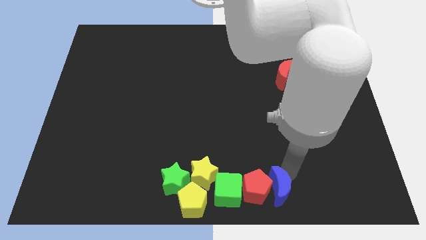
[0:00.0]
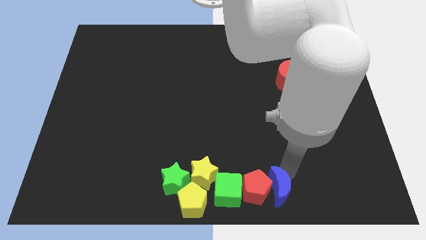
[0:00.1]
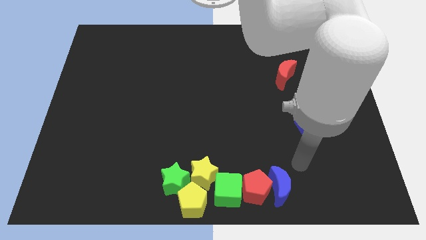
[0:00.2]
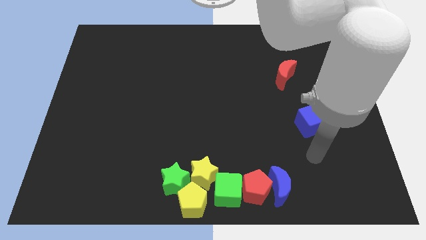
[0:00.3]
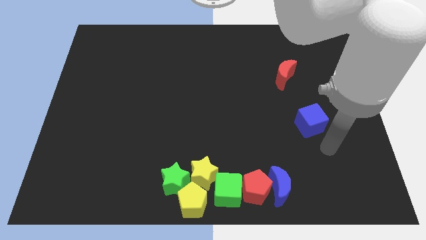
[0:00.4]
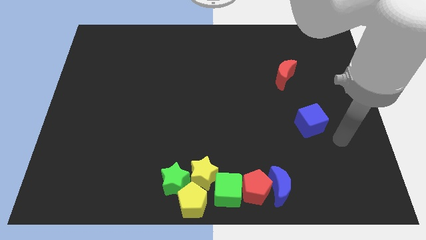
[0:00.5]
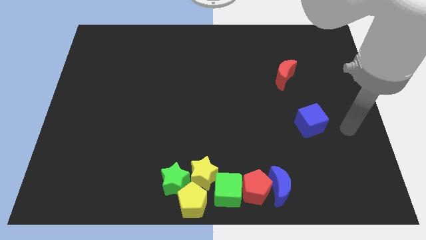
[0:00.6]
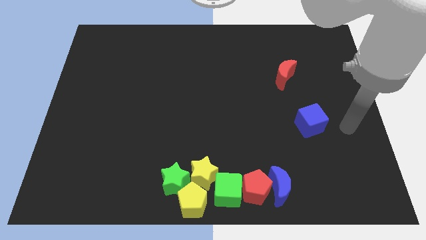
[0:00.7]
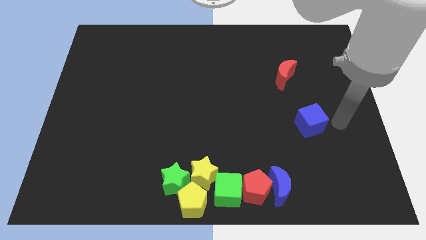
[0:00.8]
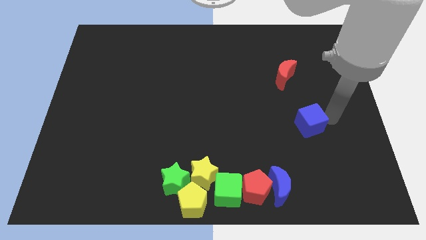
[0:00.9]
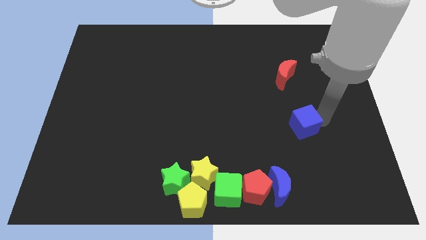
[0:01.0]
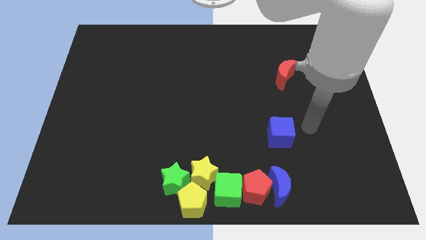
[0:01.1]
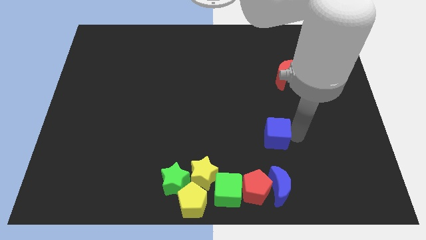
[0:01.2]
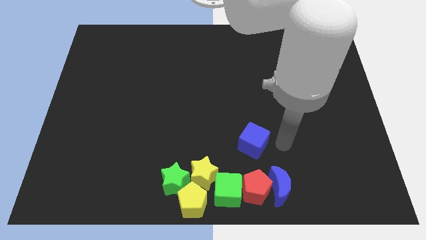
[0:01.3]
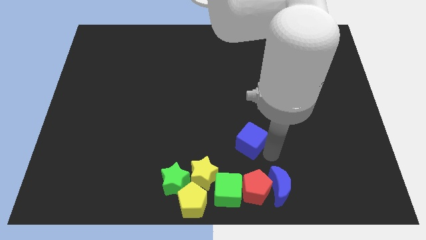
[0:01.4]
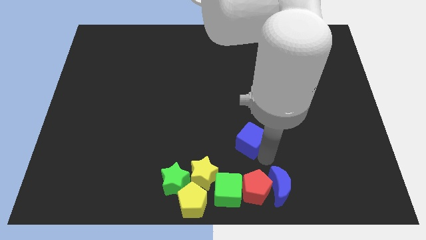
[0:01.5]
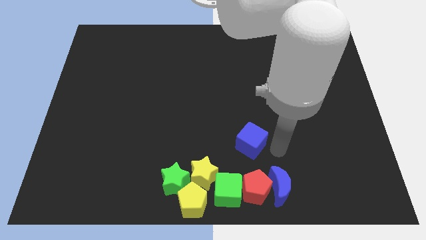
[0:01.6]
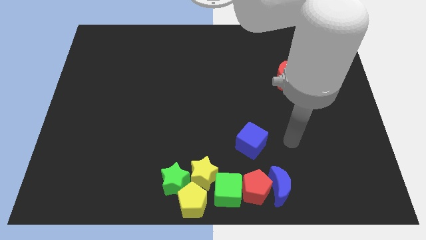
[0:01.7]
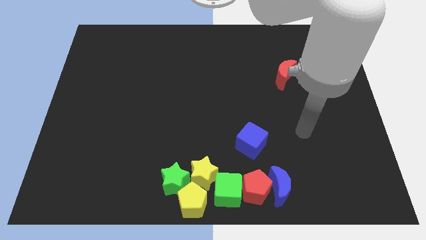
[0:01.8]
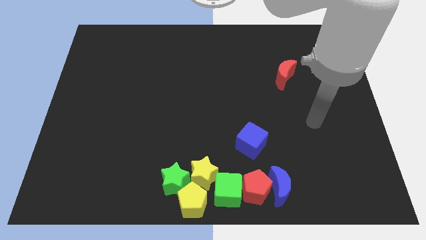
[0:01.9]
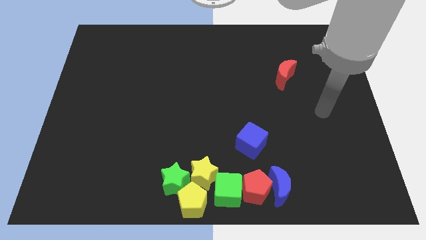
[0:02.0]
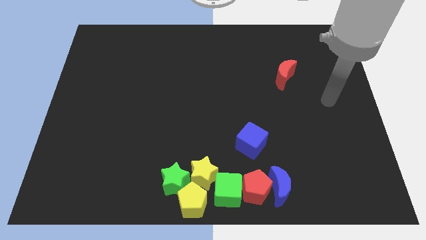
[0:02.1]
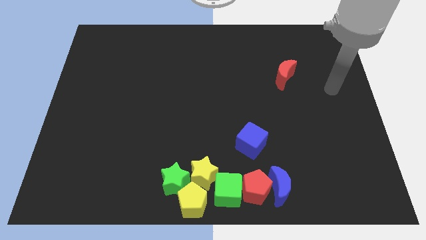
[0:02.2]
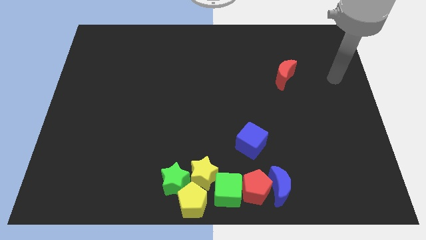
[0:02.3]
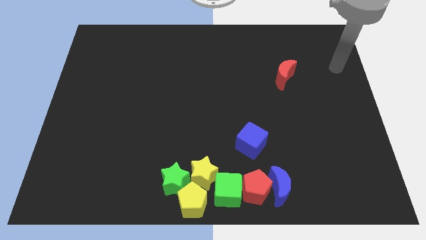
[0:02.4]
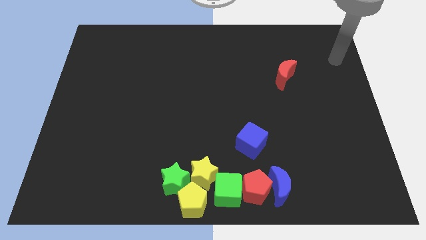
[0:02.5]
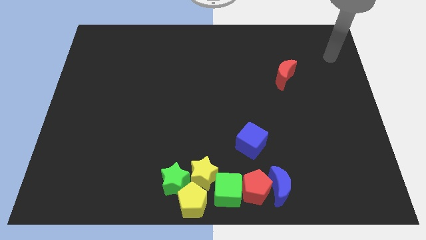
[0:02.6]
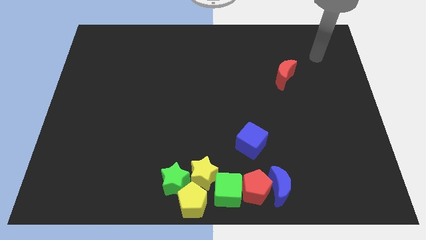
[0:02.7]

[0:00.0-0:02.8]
push the blue cube towards the group of blocks

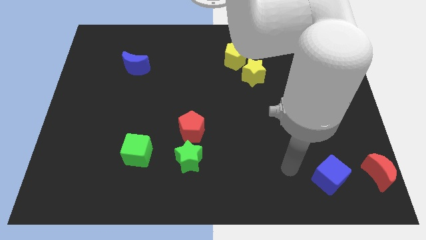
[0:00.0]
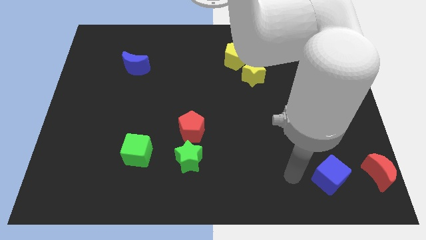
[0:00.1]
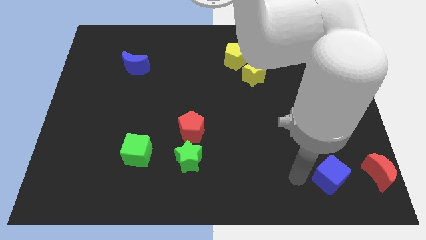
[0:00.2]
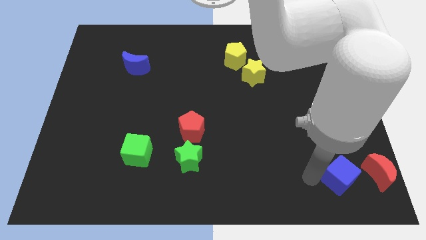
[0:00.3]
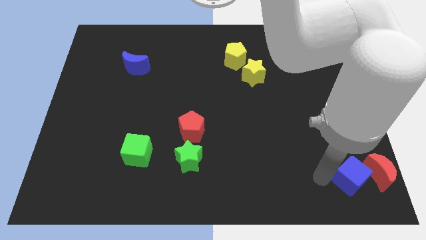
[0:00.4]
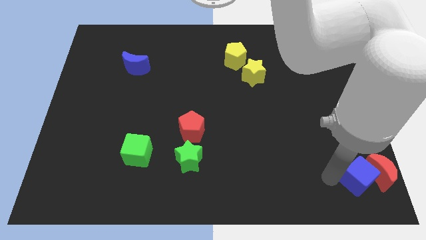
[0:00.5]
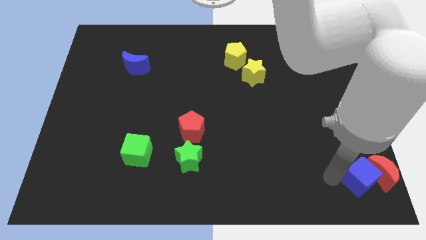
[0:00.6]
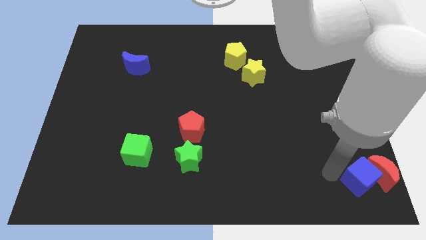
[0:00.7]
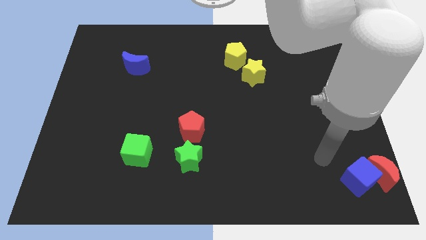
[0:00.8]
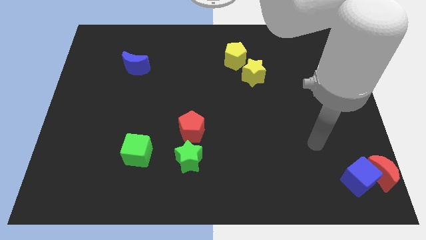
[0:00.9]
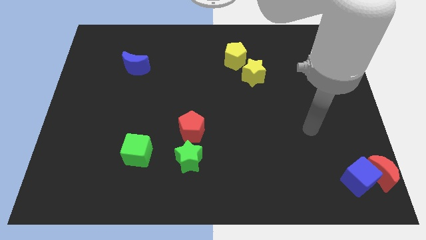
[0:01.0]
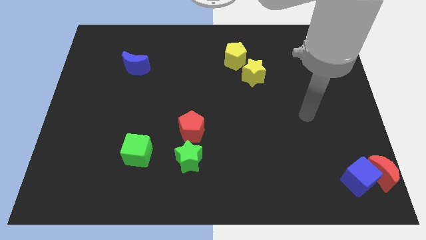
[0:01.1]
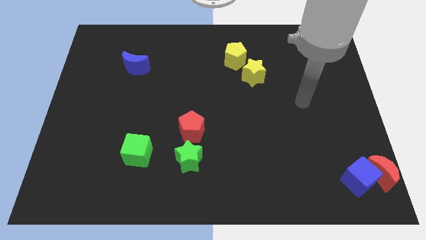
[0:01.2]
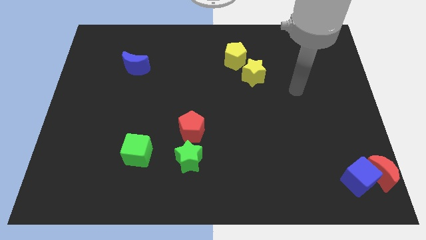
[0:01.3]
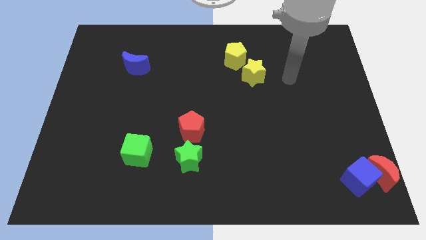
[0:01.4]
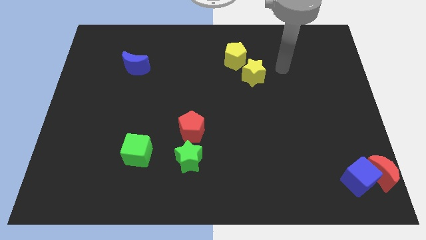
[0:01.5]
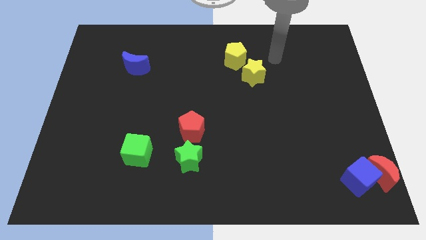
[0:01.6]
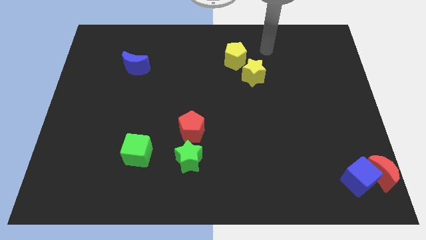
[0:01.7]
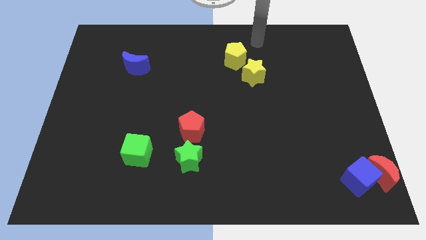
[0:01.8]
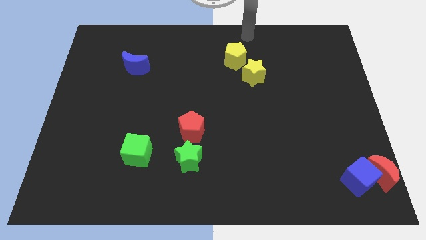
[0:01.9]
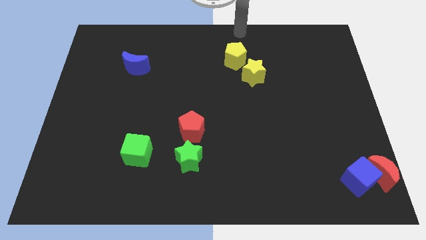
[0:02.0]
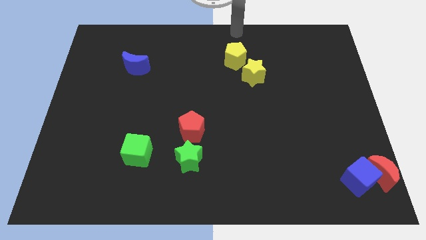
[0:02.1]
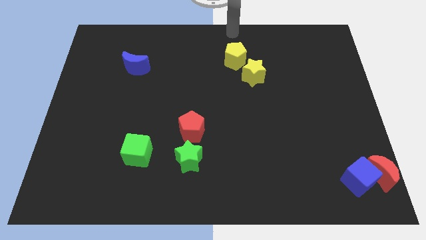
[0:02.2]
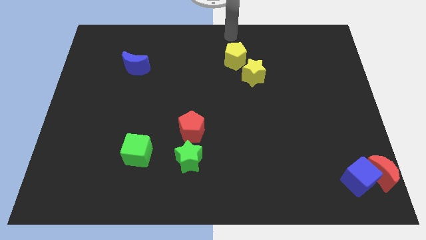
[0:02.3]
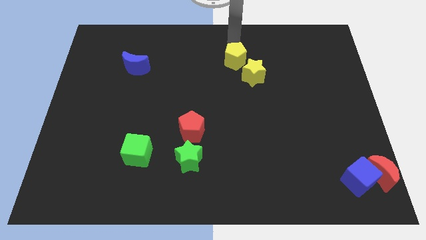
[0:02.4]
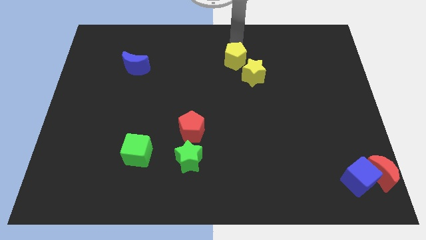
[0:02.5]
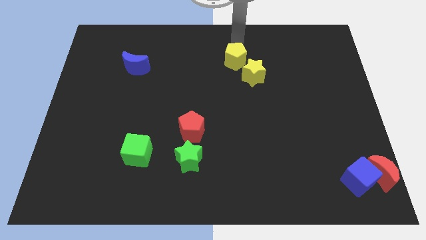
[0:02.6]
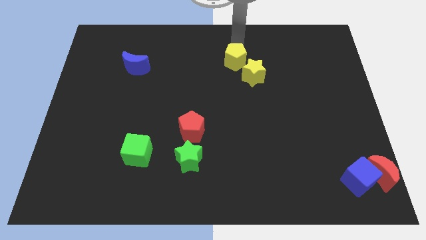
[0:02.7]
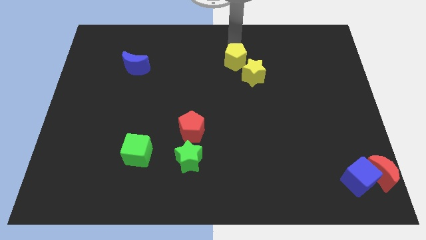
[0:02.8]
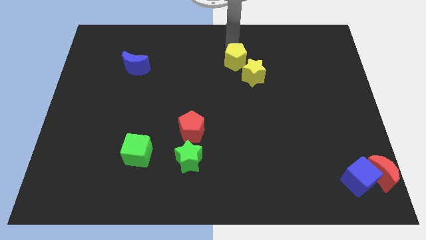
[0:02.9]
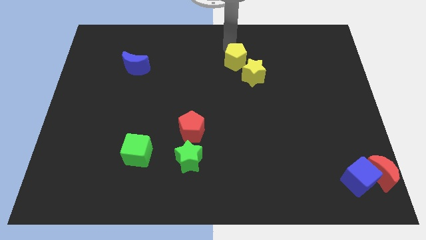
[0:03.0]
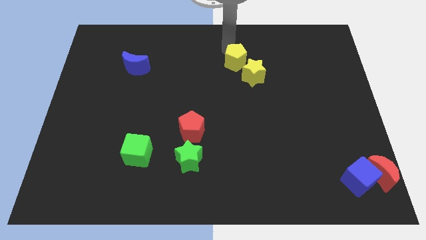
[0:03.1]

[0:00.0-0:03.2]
move your arm towards the top of the yellow pentagon

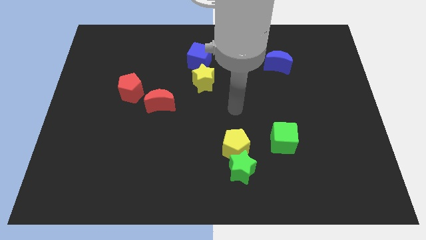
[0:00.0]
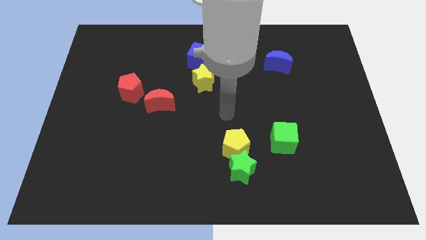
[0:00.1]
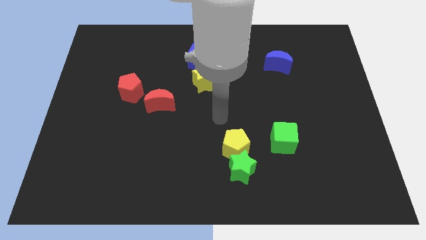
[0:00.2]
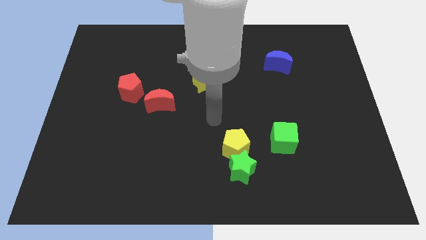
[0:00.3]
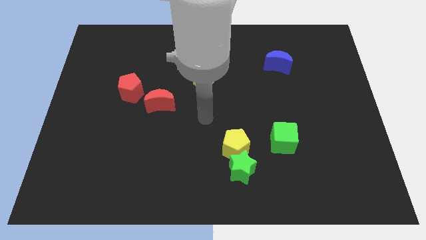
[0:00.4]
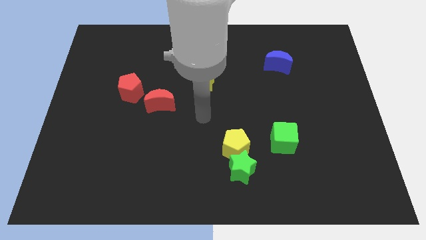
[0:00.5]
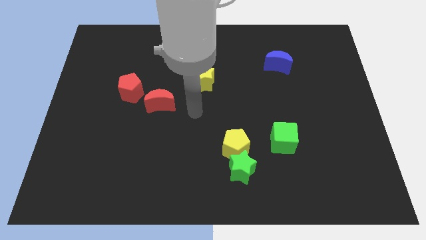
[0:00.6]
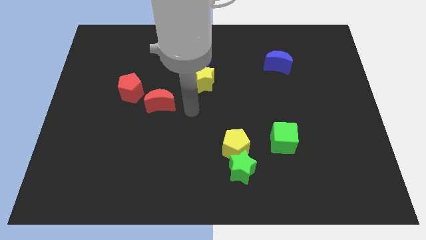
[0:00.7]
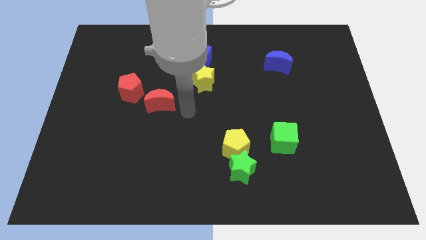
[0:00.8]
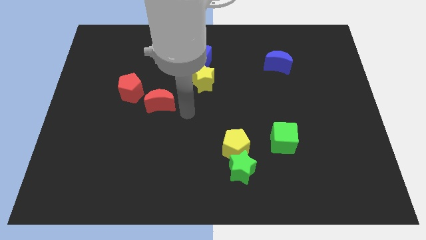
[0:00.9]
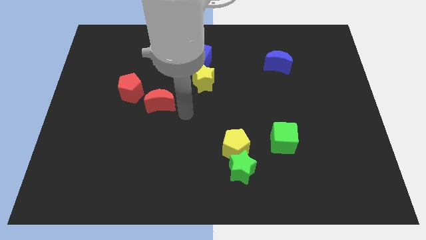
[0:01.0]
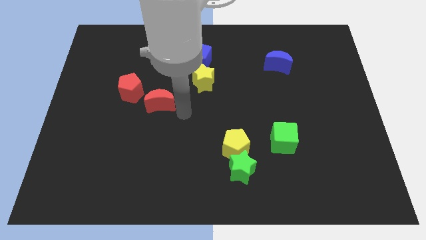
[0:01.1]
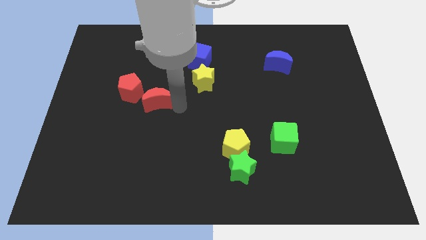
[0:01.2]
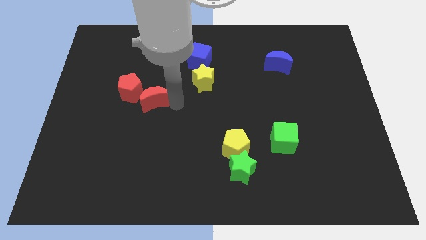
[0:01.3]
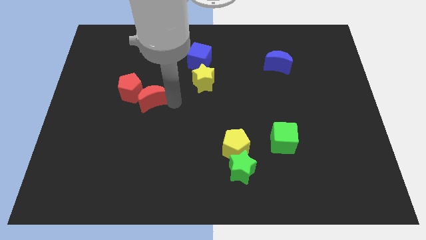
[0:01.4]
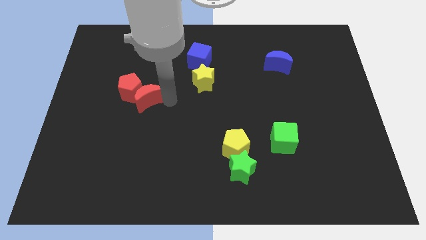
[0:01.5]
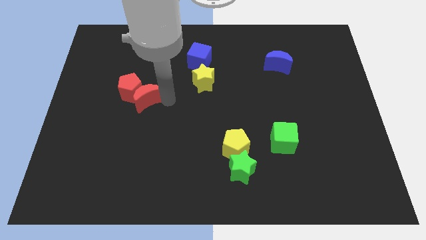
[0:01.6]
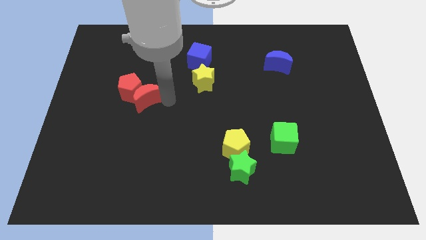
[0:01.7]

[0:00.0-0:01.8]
push the red moon towards the red pentagon

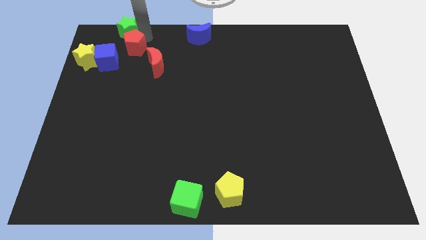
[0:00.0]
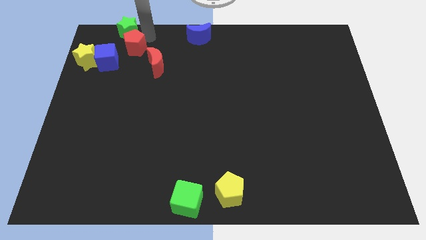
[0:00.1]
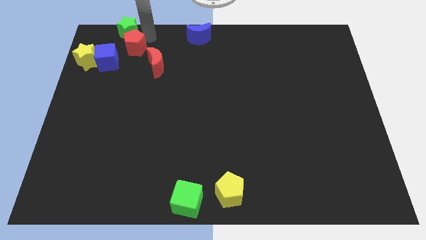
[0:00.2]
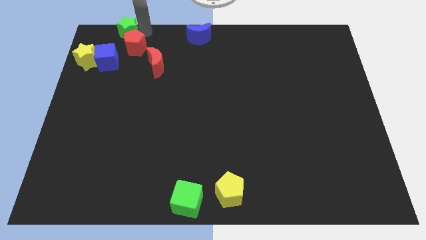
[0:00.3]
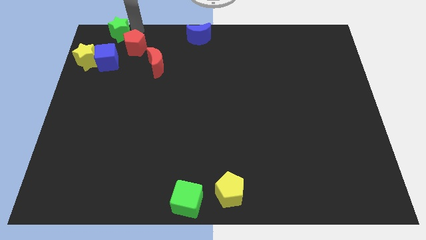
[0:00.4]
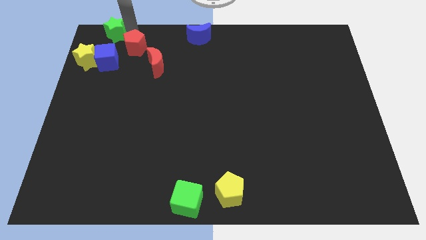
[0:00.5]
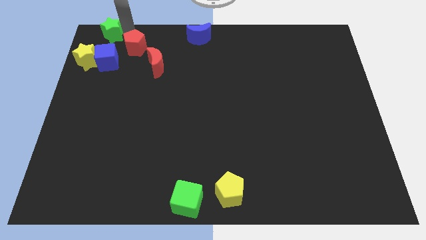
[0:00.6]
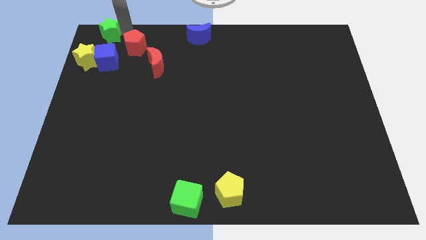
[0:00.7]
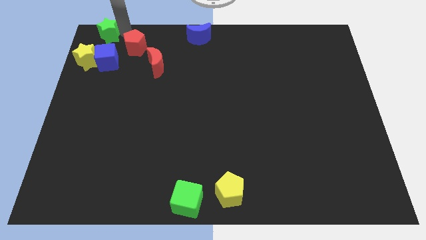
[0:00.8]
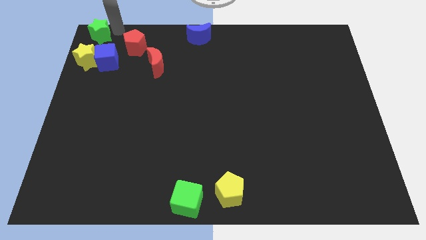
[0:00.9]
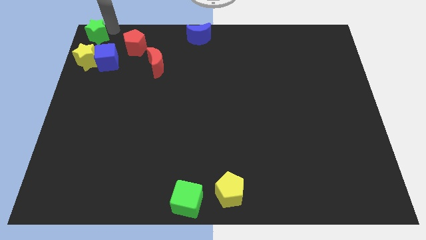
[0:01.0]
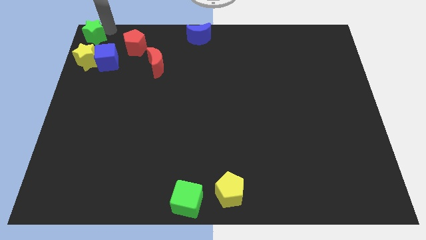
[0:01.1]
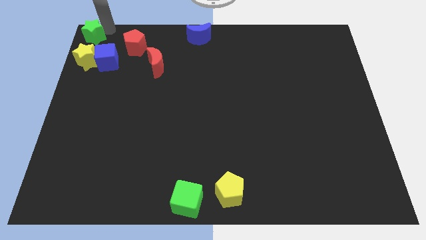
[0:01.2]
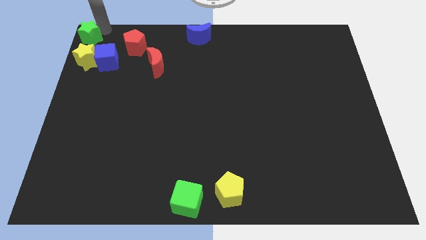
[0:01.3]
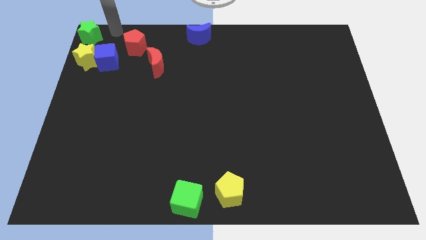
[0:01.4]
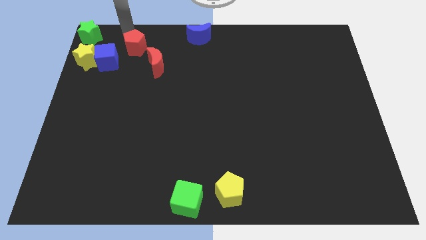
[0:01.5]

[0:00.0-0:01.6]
push the green star to the top left corner of the board
